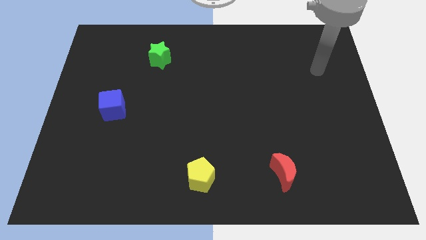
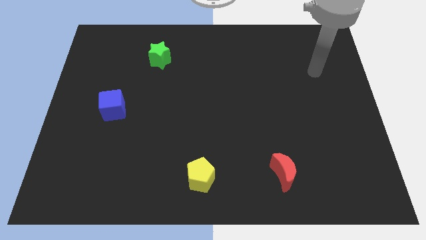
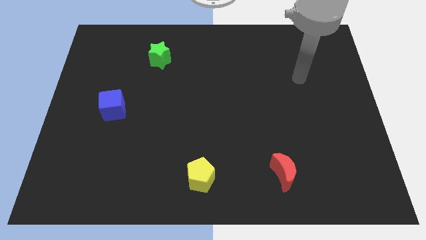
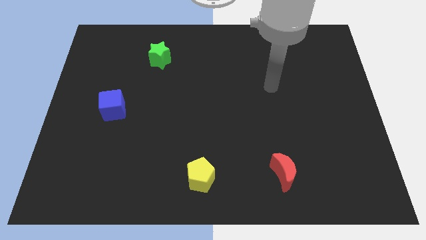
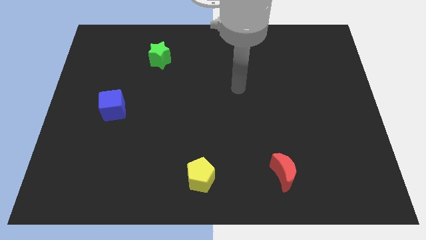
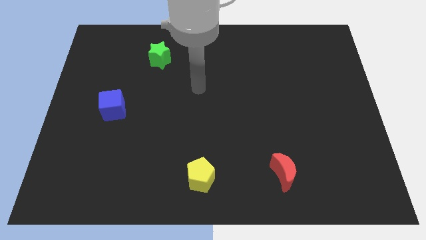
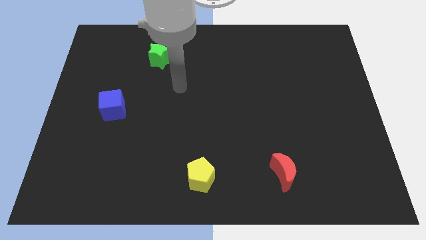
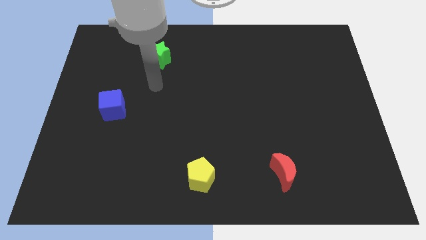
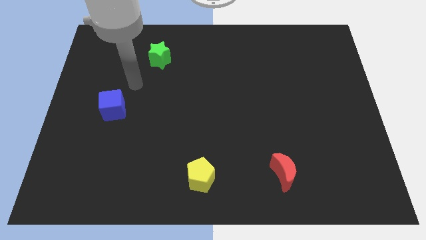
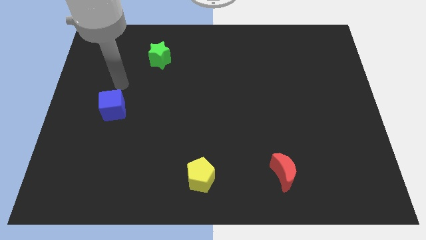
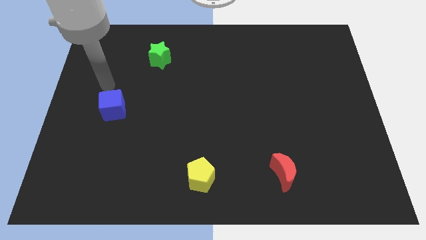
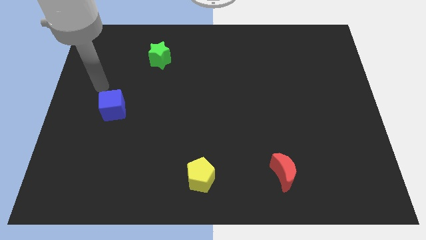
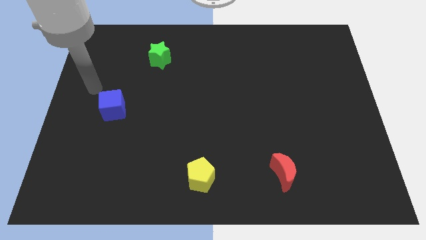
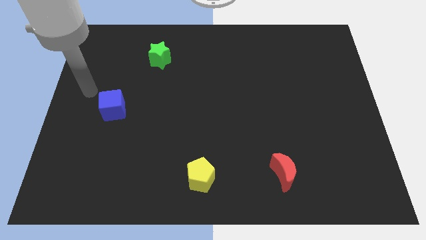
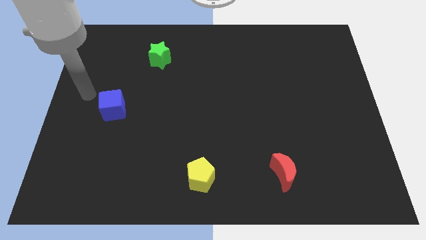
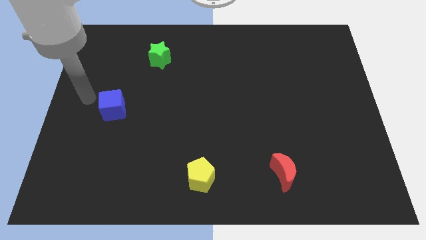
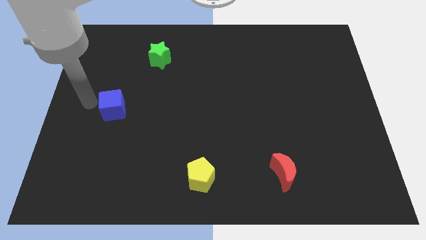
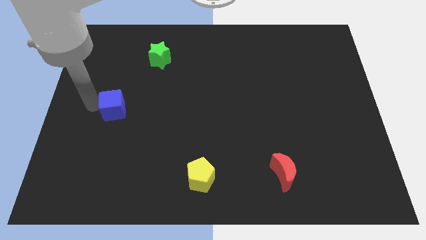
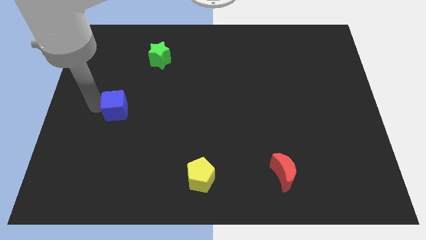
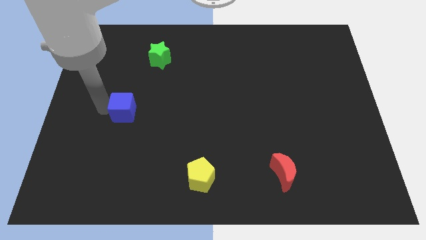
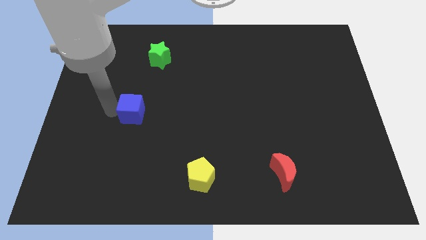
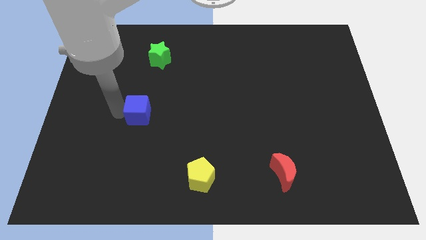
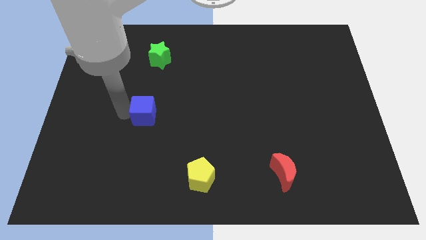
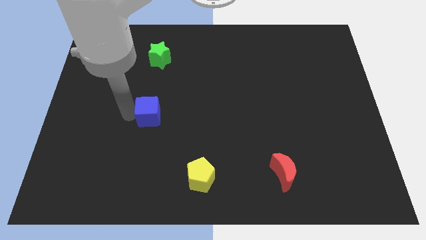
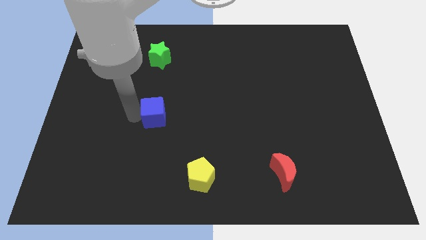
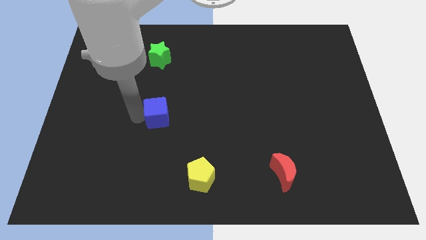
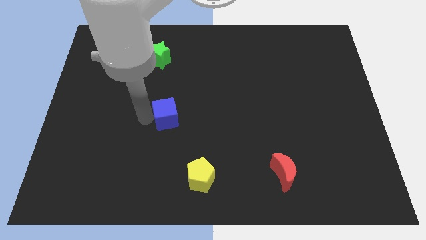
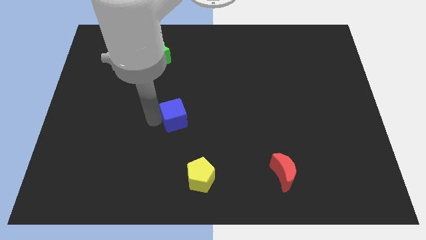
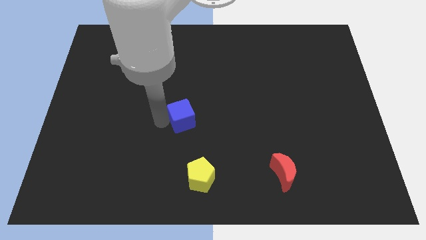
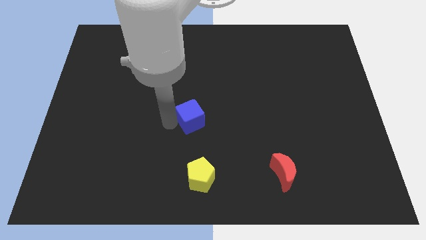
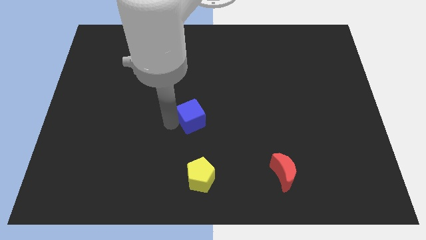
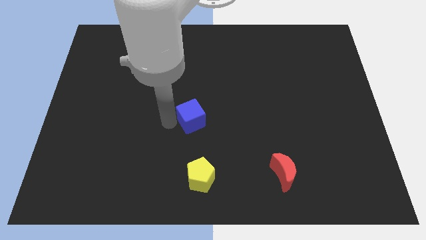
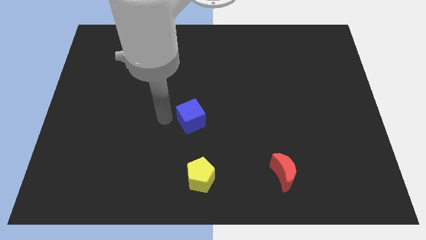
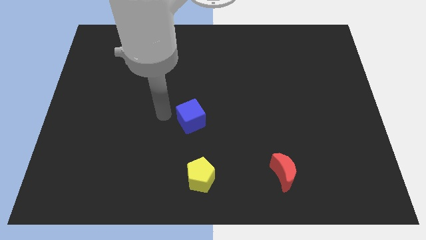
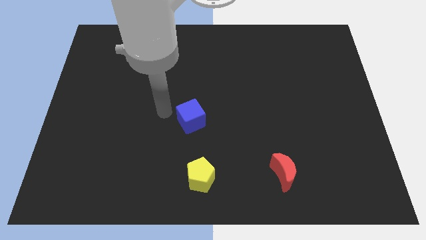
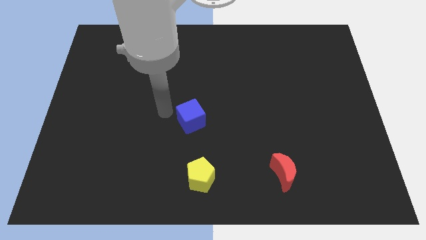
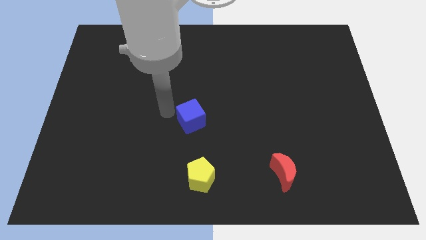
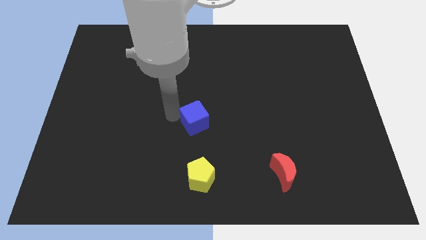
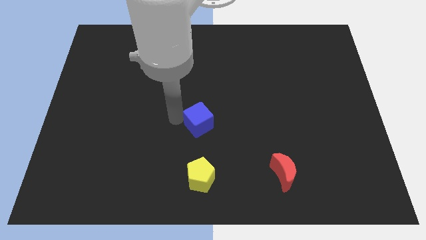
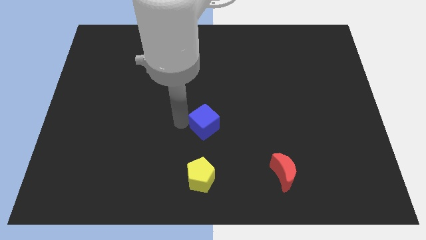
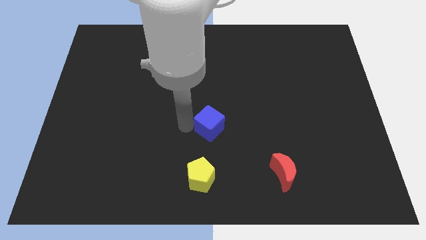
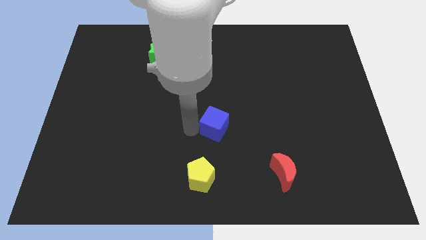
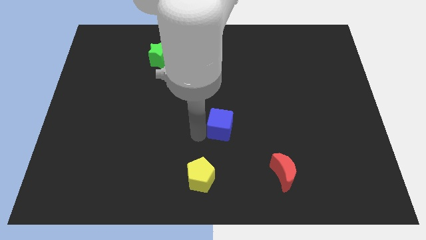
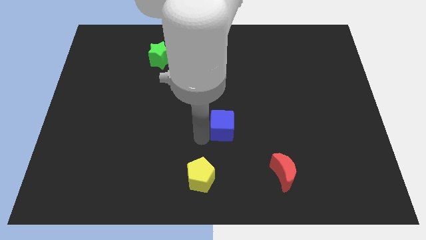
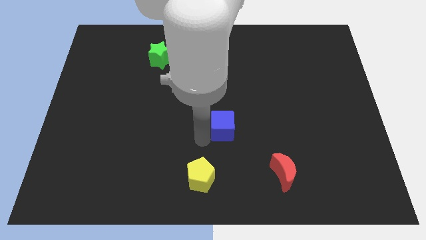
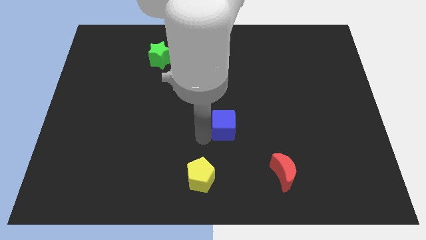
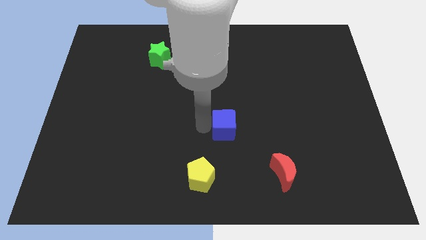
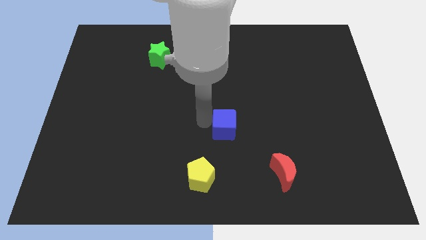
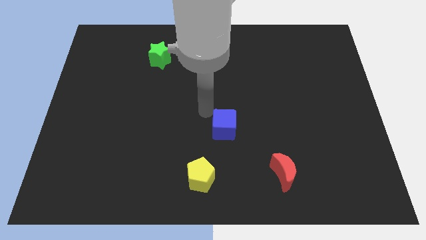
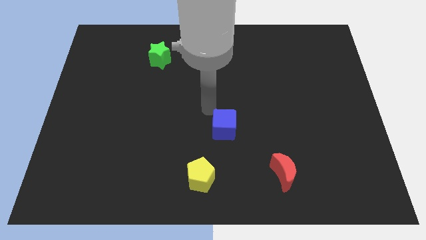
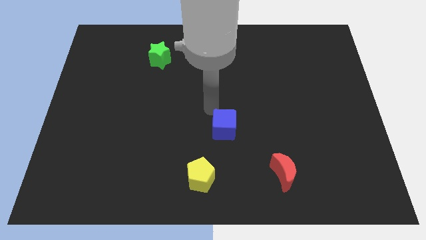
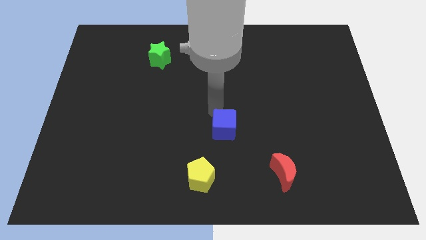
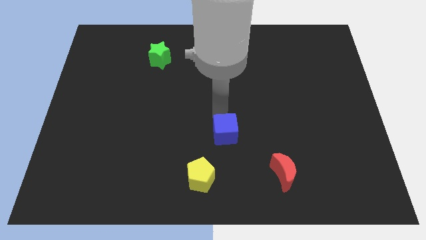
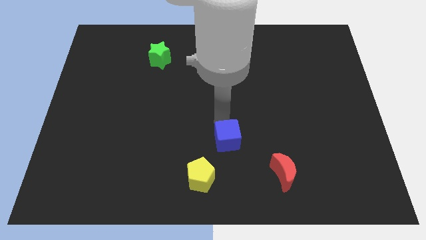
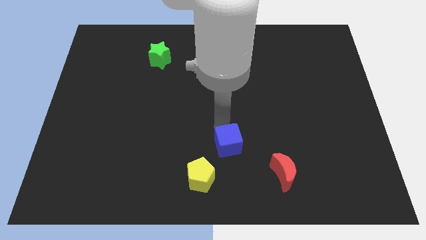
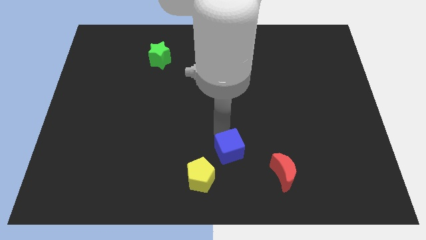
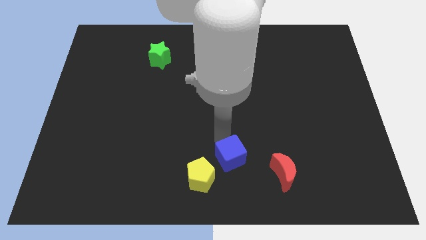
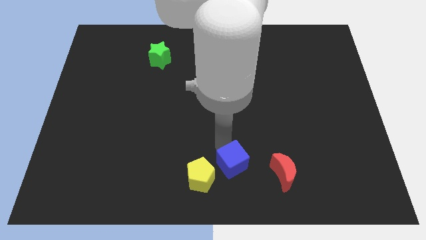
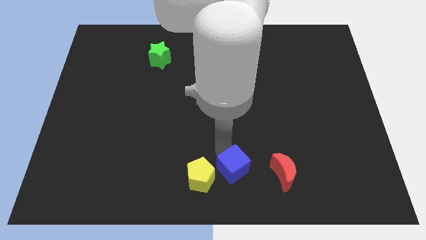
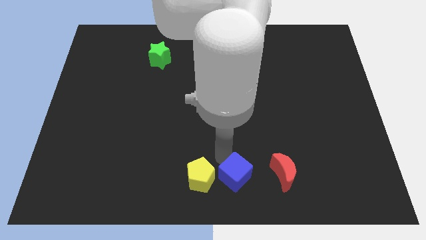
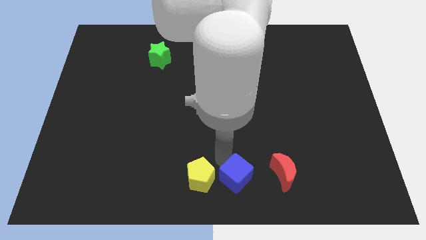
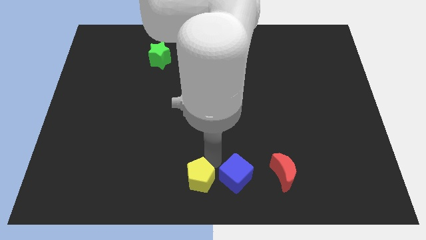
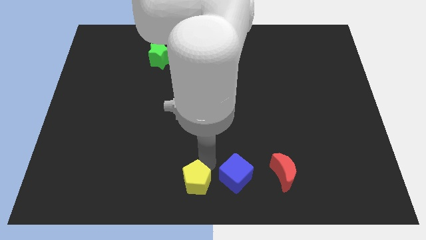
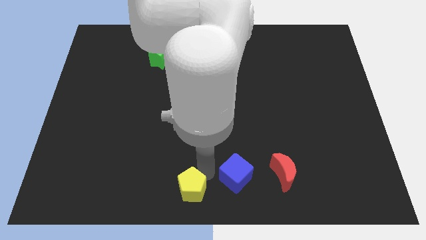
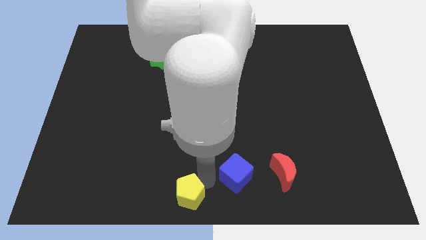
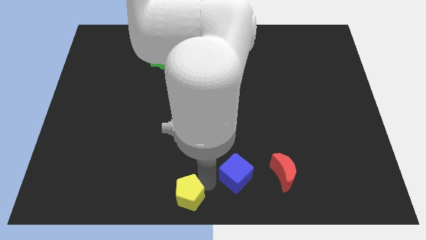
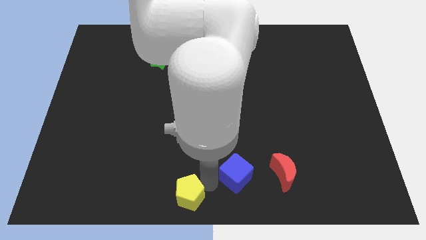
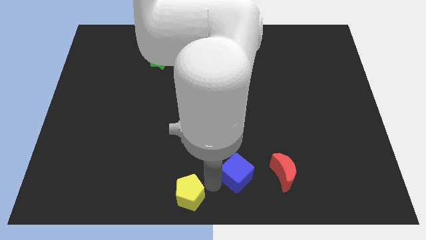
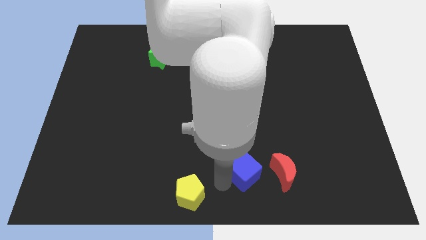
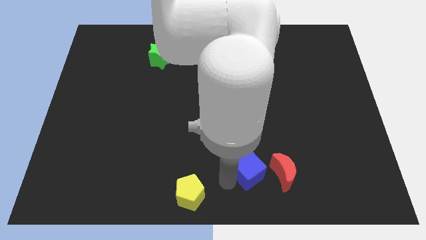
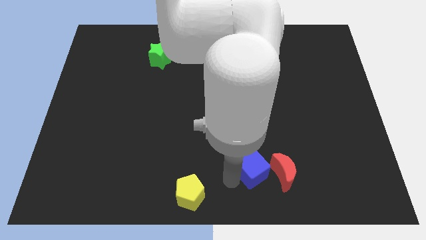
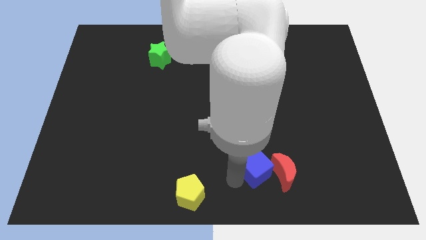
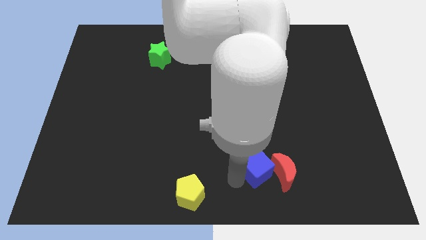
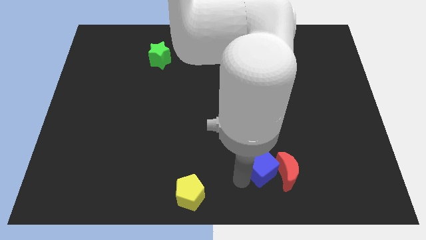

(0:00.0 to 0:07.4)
slide the blue block next to the red block

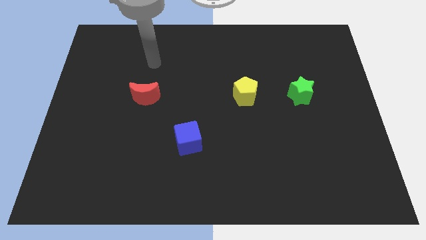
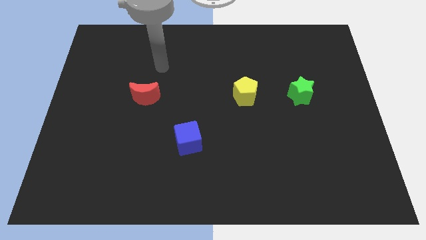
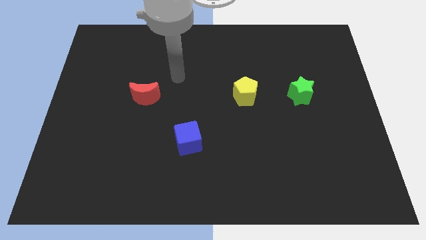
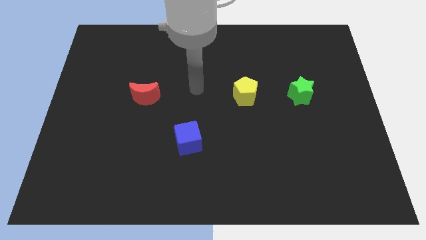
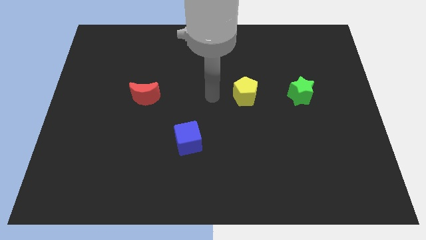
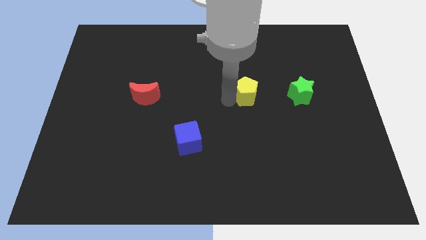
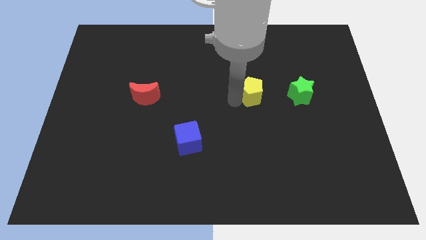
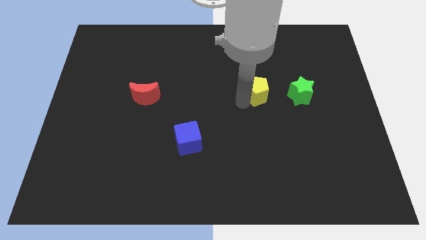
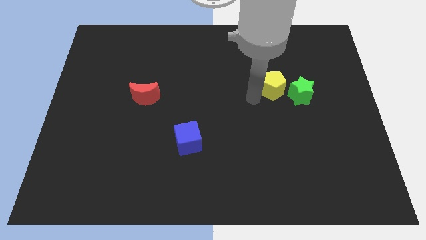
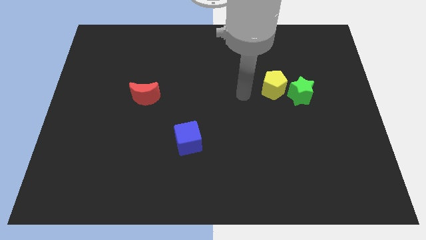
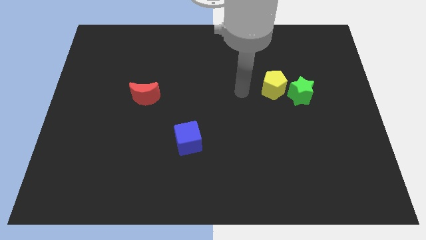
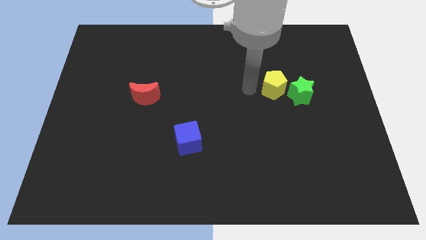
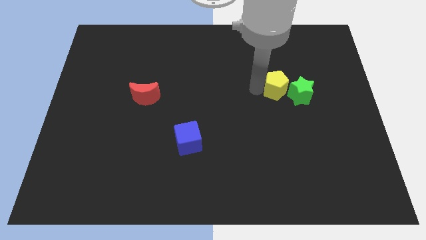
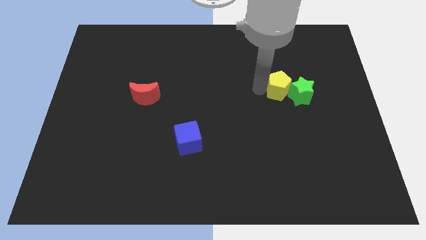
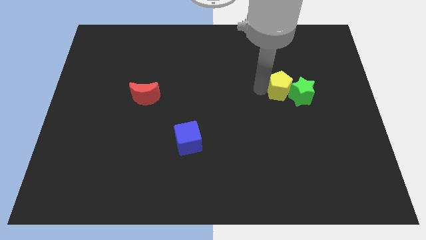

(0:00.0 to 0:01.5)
push the pentagon next to the green star
